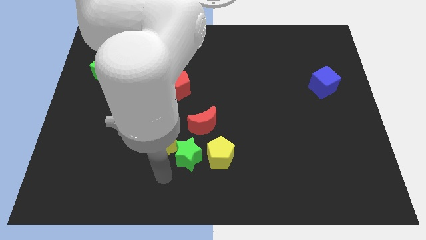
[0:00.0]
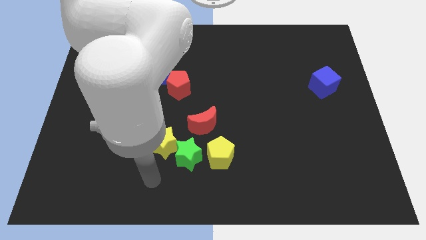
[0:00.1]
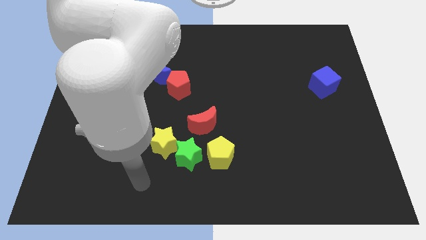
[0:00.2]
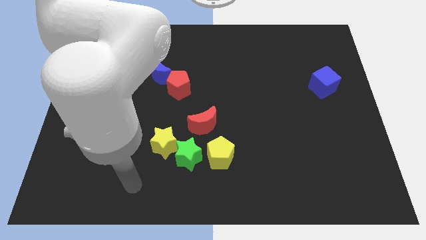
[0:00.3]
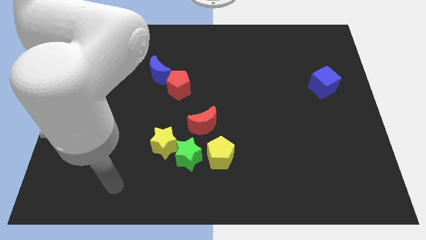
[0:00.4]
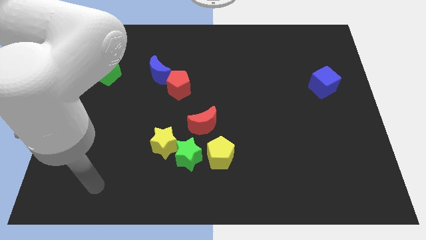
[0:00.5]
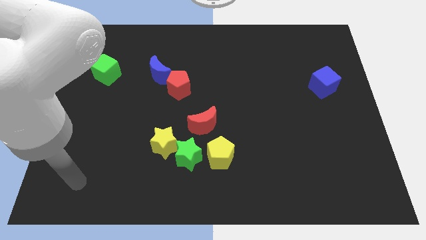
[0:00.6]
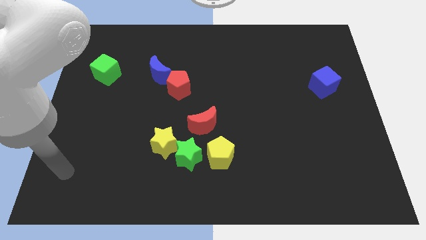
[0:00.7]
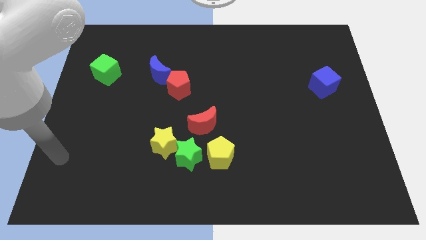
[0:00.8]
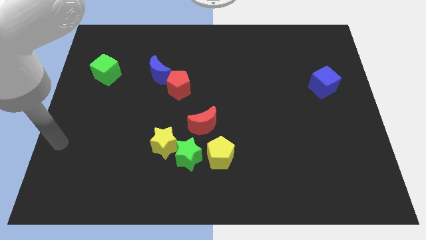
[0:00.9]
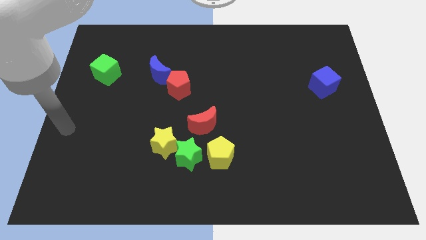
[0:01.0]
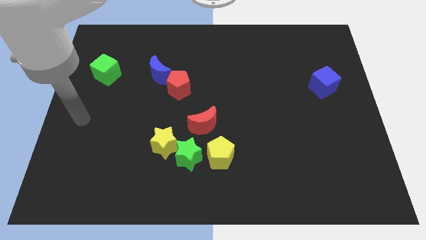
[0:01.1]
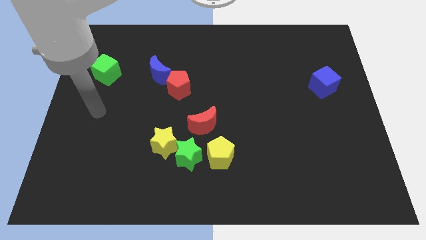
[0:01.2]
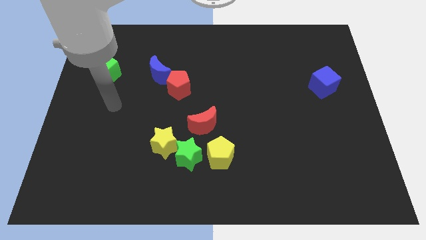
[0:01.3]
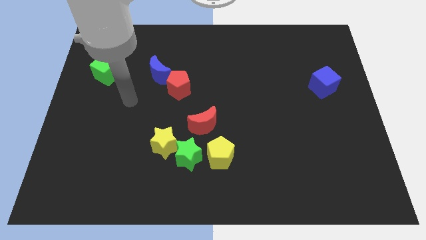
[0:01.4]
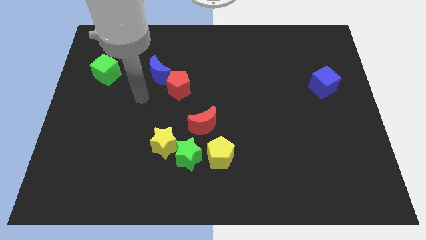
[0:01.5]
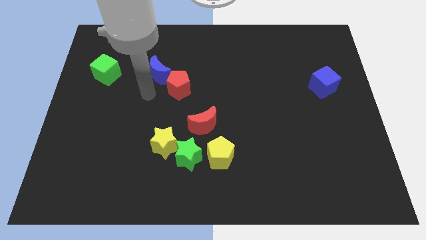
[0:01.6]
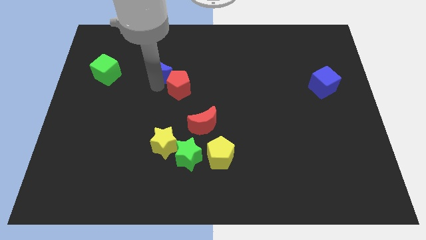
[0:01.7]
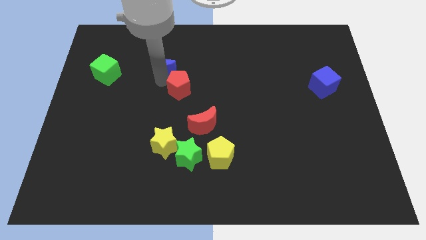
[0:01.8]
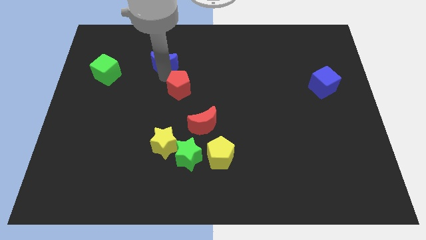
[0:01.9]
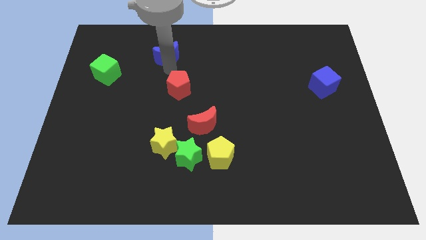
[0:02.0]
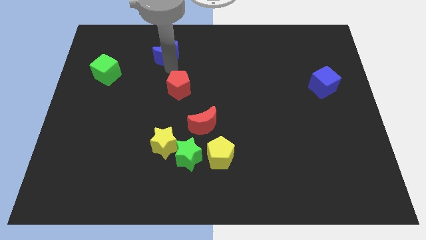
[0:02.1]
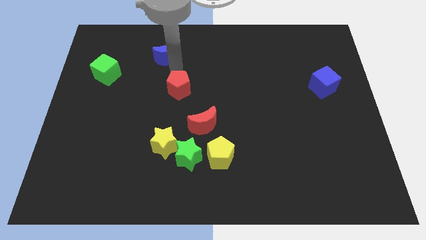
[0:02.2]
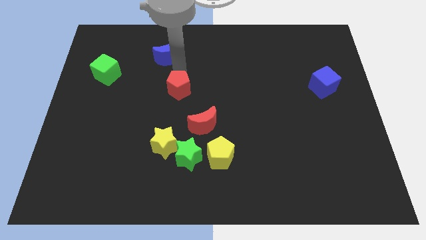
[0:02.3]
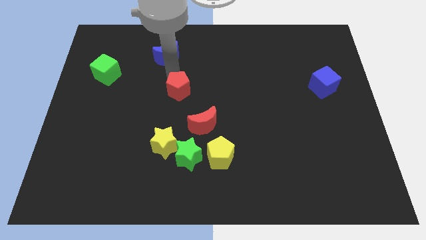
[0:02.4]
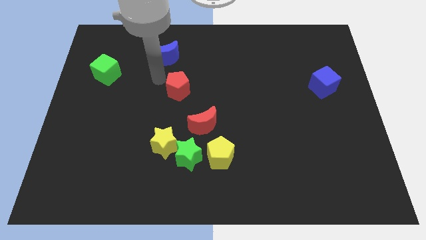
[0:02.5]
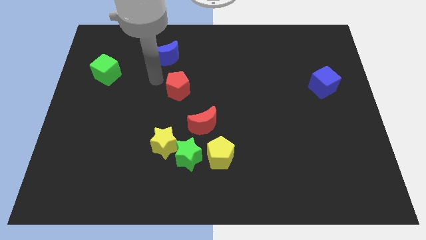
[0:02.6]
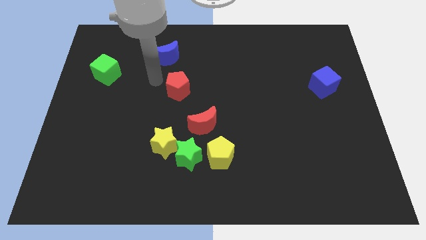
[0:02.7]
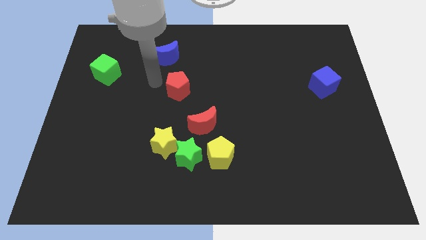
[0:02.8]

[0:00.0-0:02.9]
separate the blue crescent and red pentagon

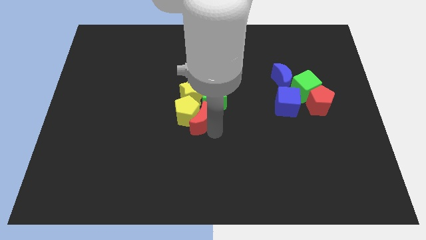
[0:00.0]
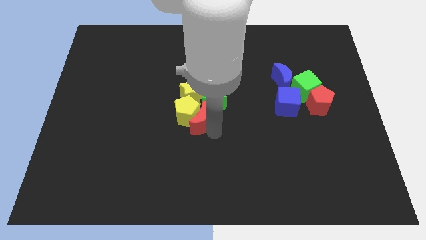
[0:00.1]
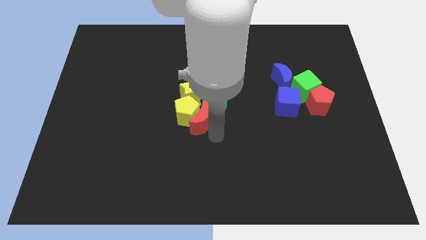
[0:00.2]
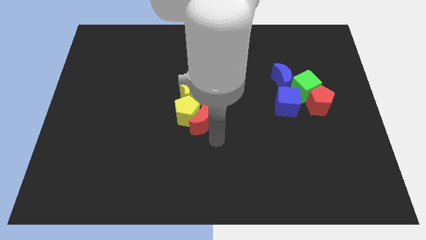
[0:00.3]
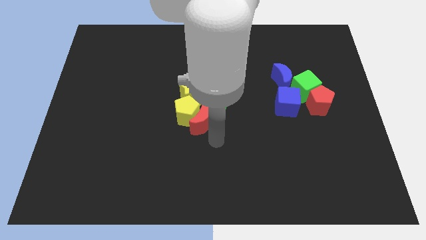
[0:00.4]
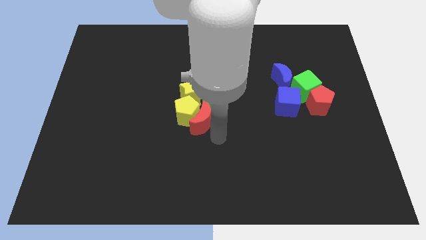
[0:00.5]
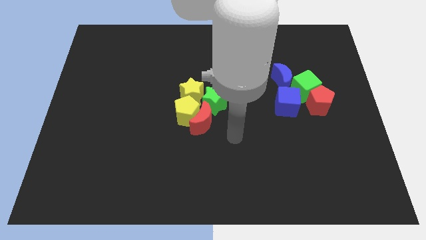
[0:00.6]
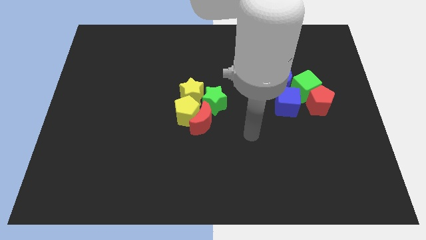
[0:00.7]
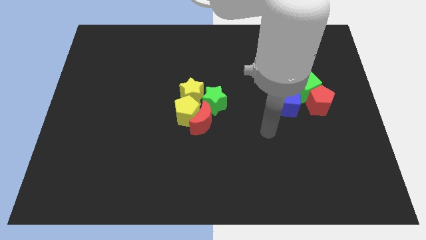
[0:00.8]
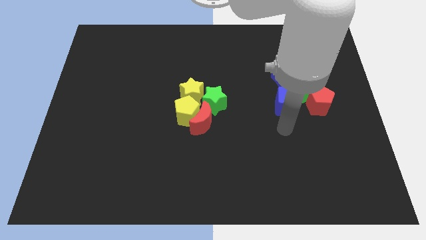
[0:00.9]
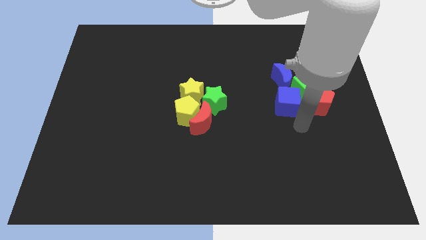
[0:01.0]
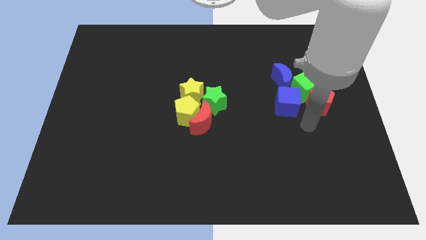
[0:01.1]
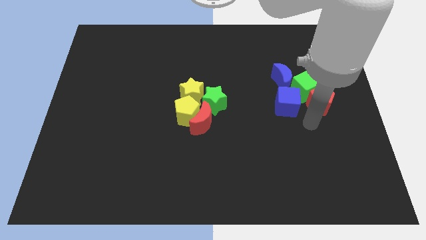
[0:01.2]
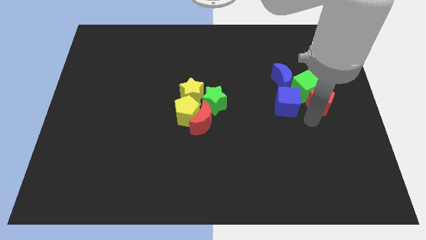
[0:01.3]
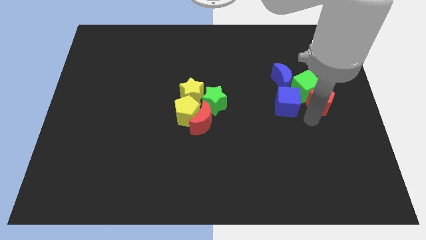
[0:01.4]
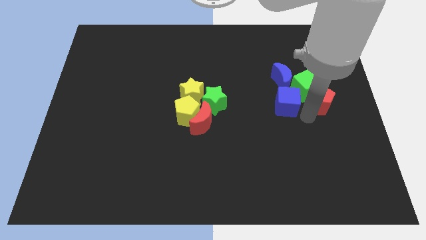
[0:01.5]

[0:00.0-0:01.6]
move your arm away from red moon

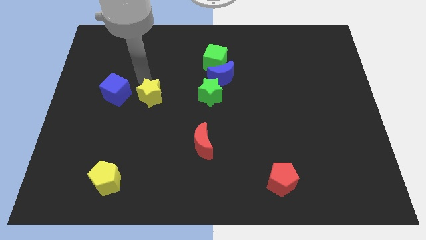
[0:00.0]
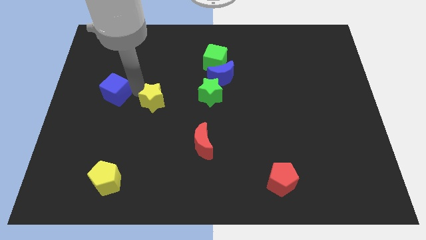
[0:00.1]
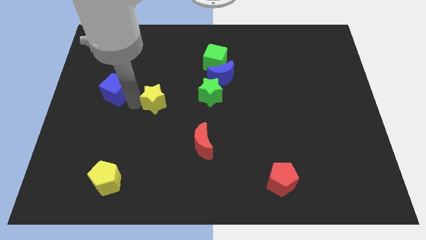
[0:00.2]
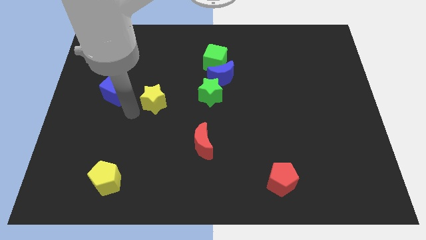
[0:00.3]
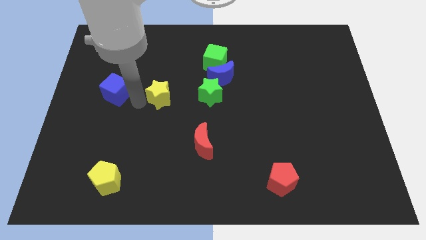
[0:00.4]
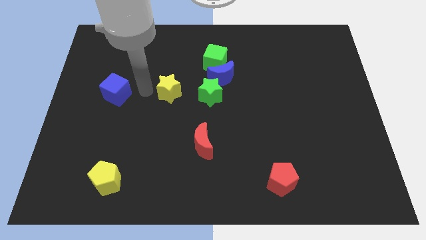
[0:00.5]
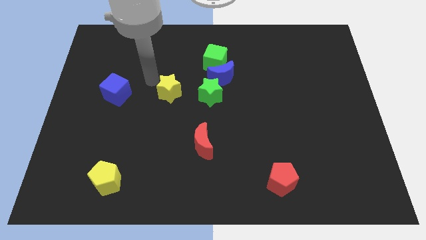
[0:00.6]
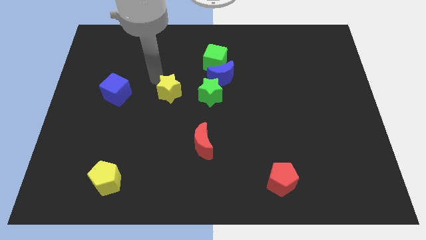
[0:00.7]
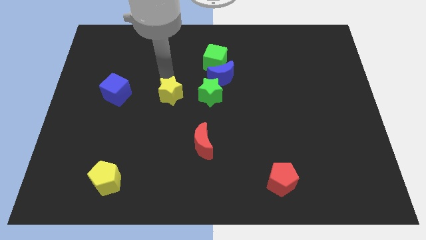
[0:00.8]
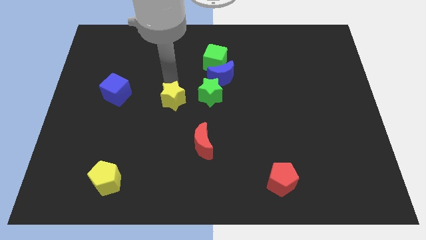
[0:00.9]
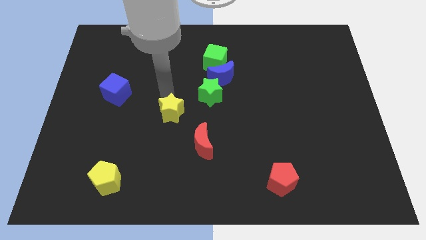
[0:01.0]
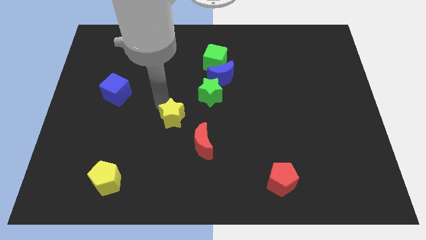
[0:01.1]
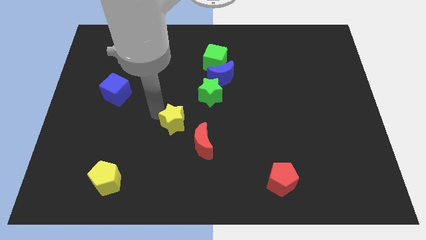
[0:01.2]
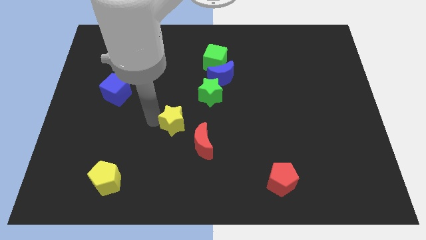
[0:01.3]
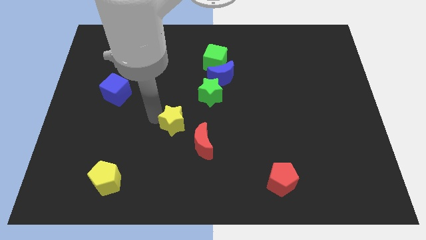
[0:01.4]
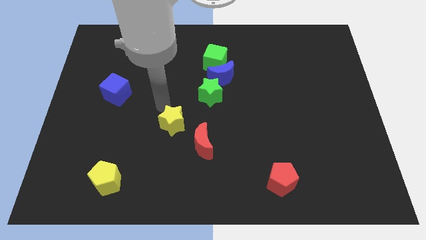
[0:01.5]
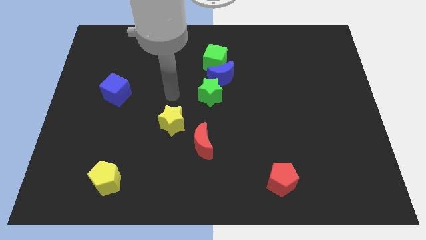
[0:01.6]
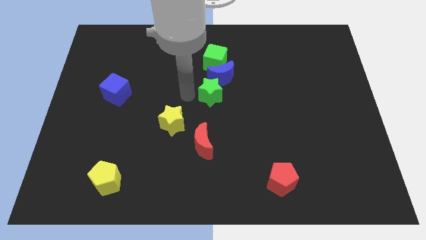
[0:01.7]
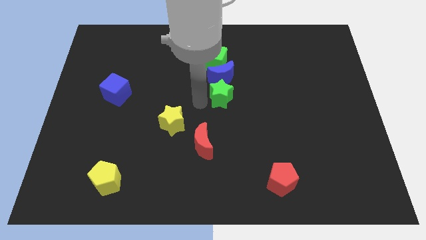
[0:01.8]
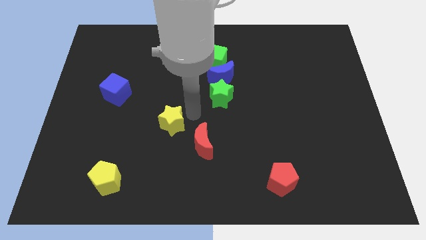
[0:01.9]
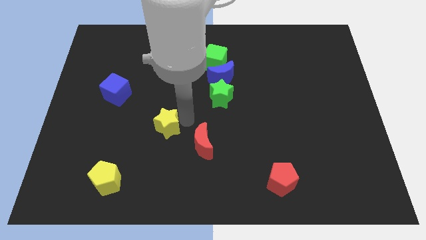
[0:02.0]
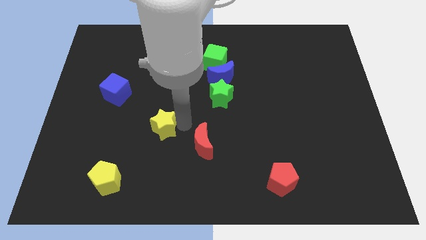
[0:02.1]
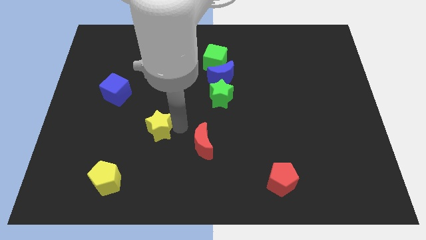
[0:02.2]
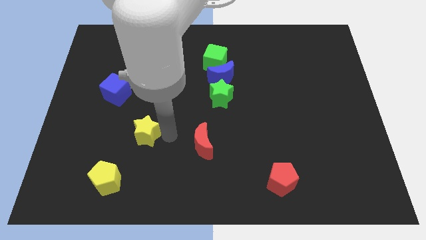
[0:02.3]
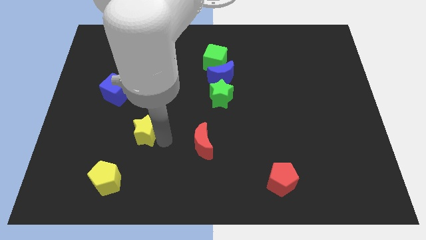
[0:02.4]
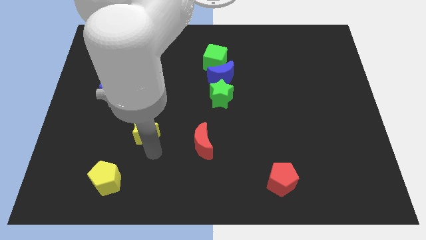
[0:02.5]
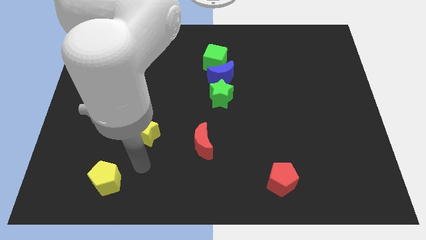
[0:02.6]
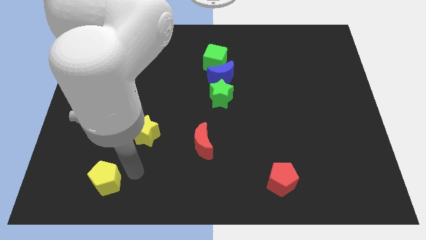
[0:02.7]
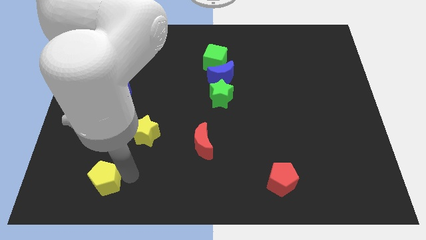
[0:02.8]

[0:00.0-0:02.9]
move the yellow star to the left of the red crescent

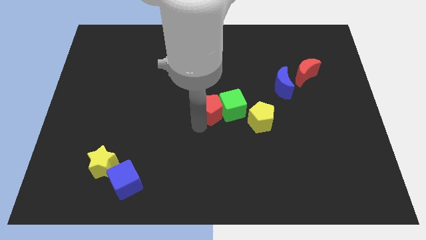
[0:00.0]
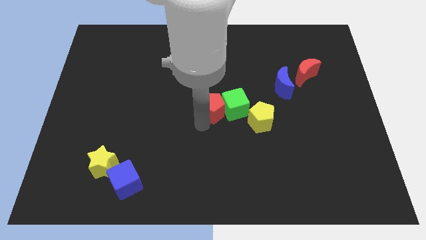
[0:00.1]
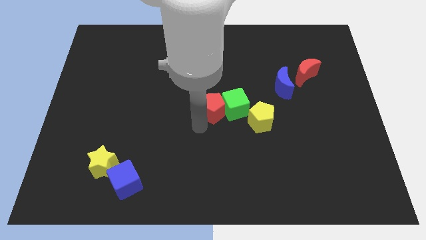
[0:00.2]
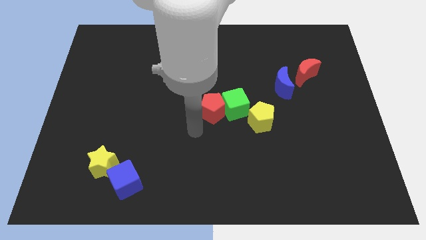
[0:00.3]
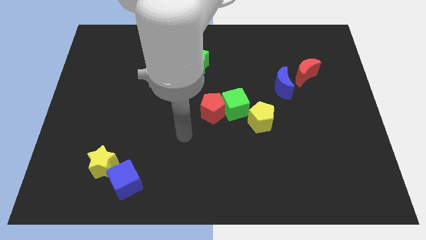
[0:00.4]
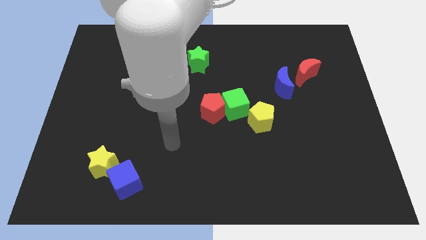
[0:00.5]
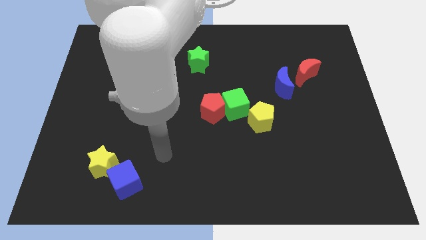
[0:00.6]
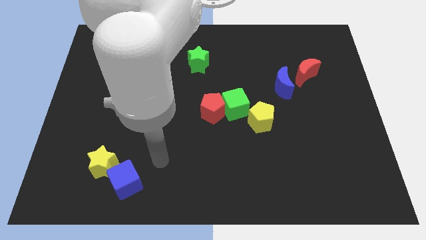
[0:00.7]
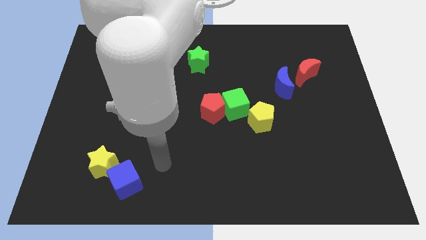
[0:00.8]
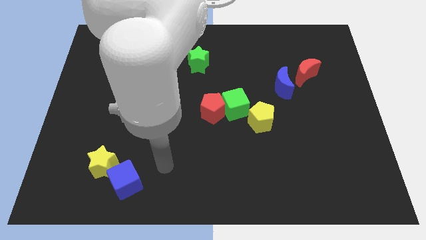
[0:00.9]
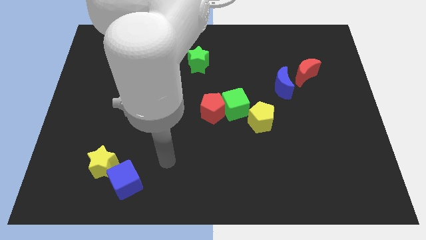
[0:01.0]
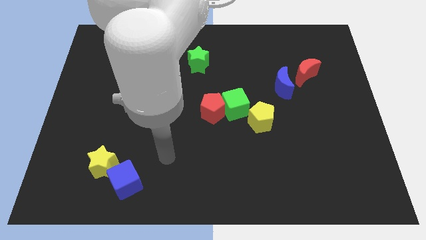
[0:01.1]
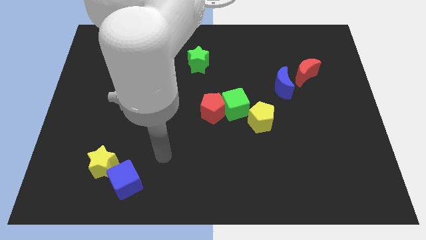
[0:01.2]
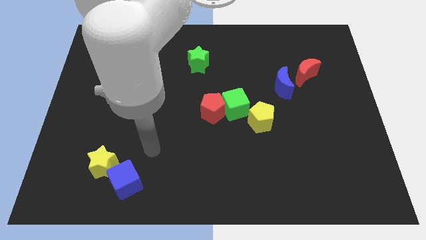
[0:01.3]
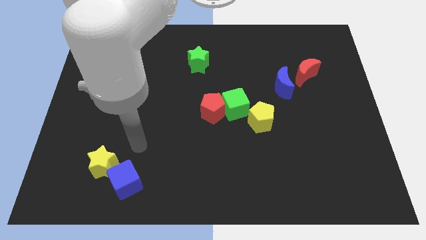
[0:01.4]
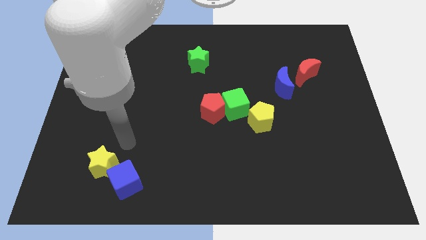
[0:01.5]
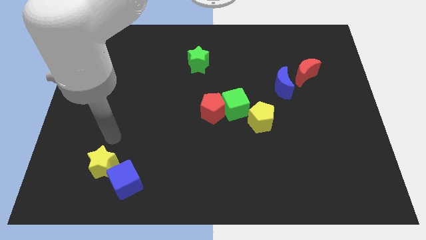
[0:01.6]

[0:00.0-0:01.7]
point the arm above the yellow star
